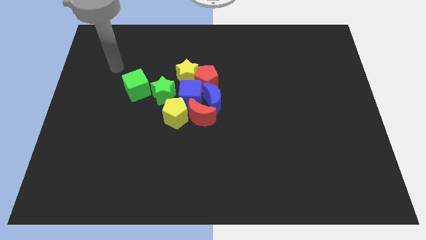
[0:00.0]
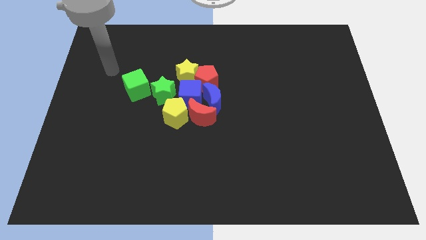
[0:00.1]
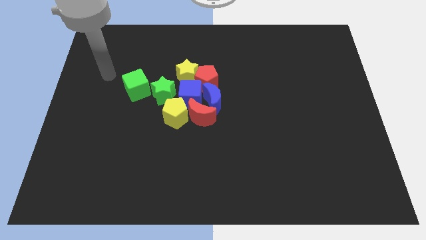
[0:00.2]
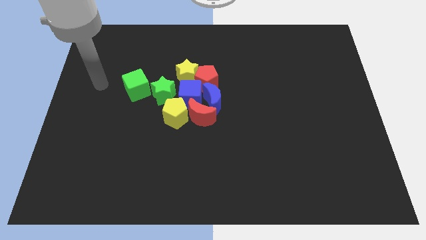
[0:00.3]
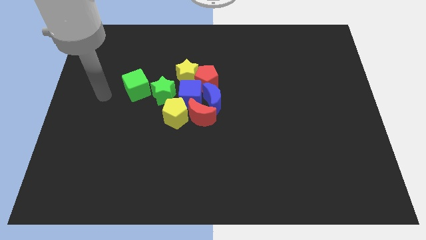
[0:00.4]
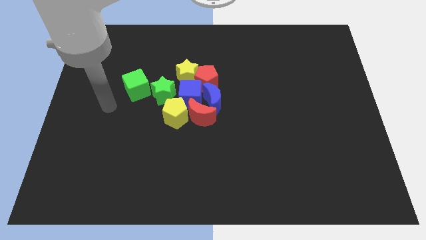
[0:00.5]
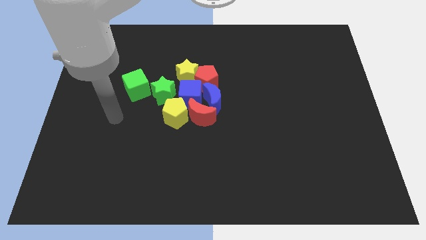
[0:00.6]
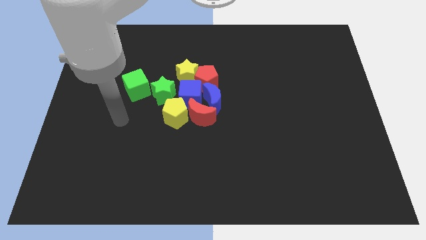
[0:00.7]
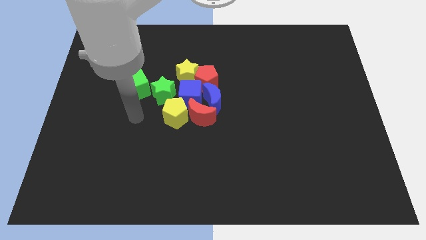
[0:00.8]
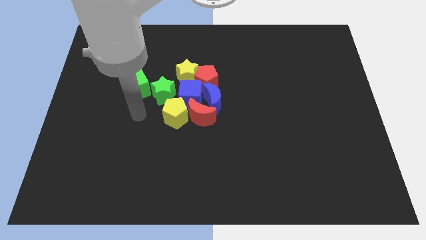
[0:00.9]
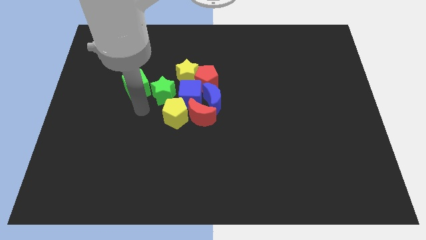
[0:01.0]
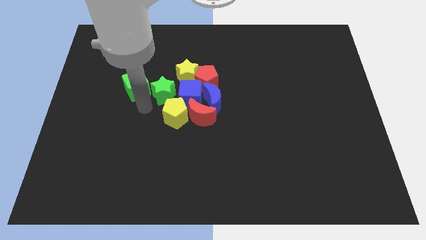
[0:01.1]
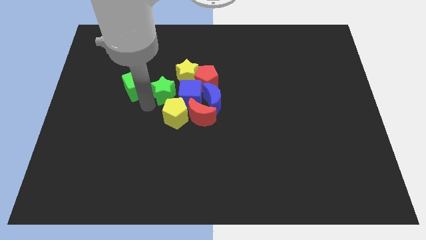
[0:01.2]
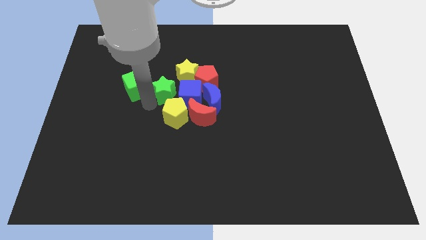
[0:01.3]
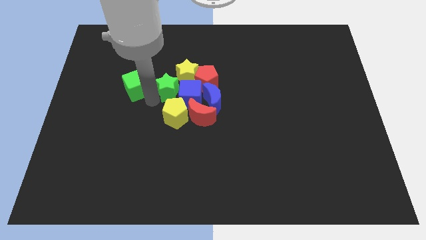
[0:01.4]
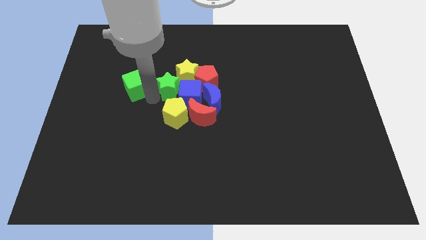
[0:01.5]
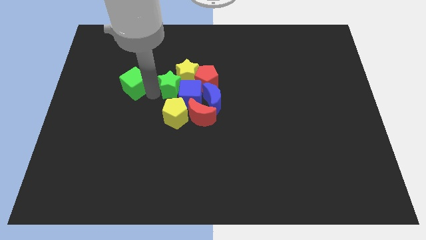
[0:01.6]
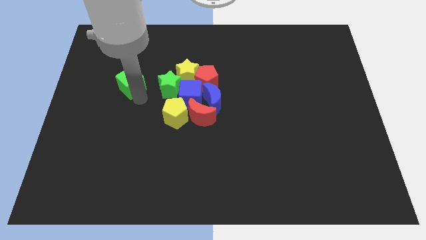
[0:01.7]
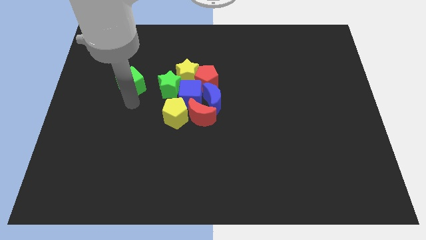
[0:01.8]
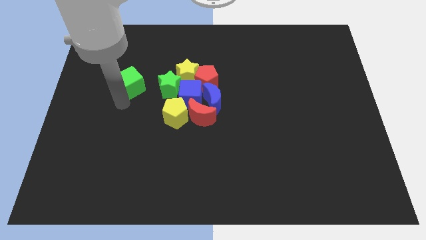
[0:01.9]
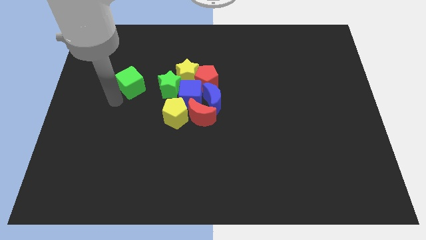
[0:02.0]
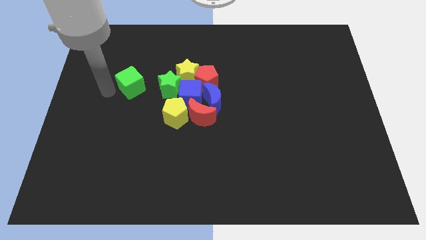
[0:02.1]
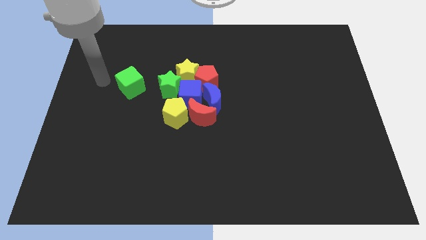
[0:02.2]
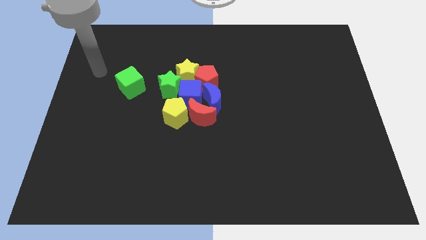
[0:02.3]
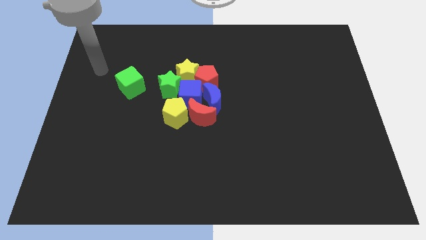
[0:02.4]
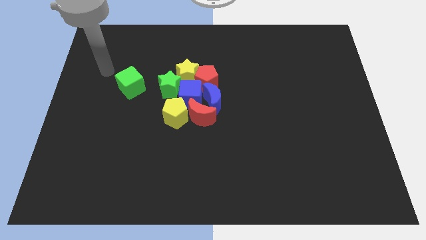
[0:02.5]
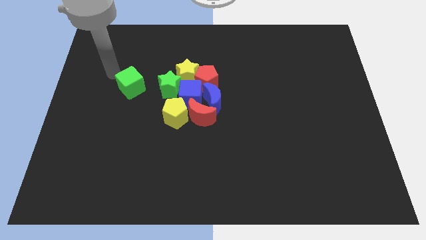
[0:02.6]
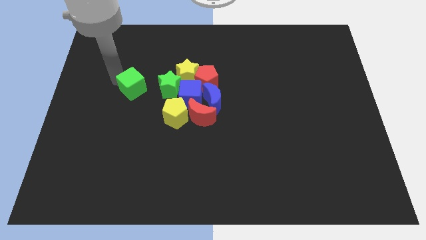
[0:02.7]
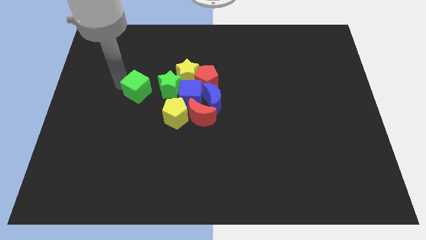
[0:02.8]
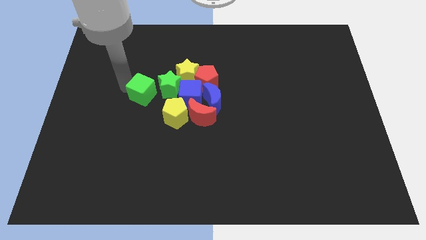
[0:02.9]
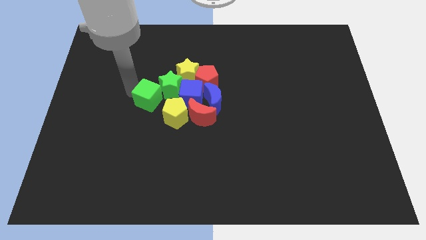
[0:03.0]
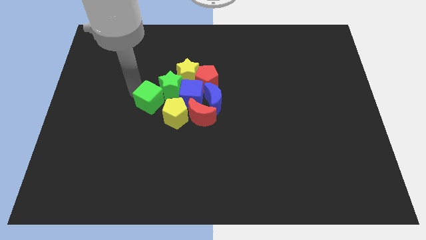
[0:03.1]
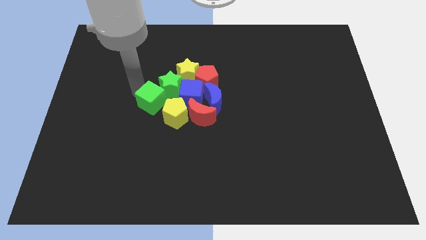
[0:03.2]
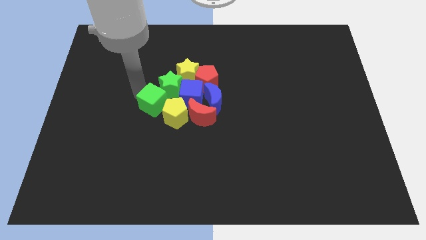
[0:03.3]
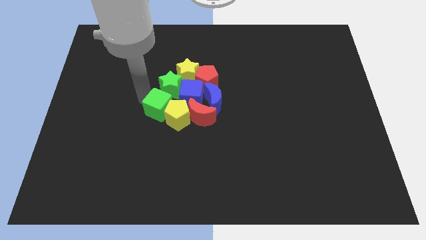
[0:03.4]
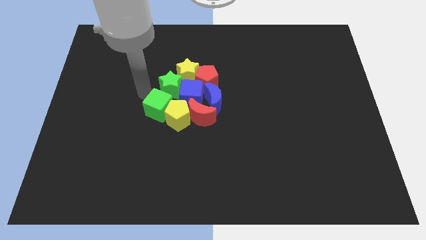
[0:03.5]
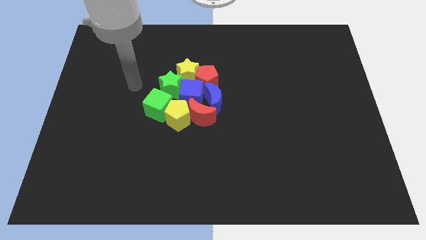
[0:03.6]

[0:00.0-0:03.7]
move the green blocks towards the yellow blocks

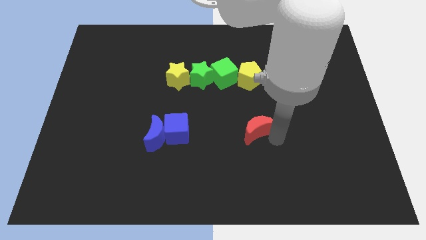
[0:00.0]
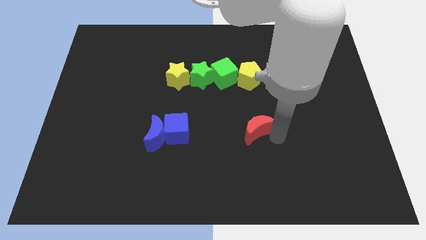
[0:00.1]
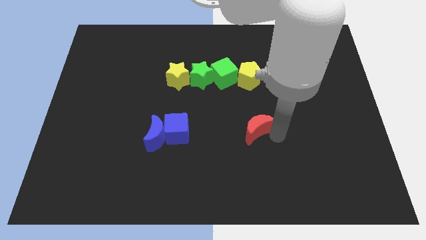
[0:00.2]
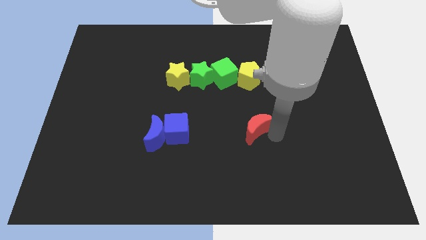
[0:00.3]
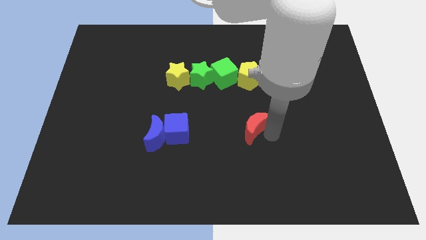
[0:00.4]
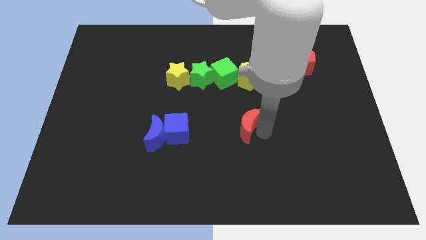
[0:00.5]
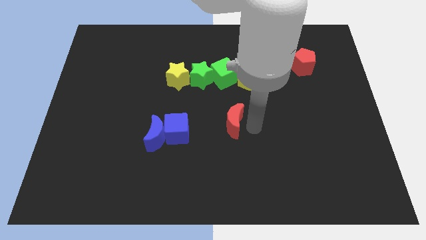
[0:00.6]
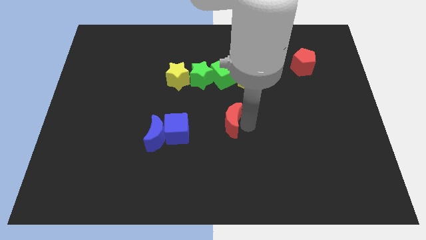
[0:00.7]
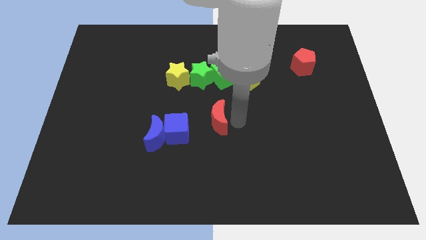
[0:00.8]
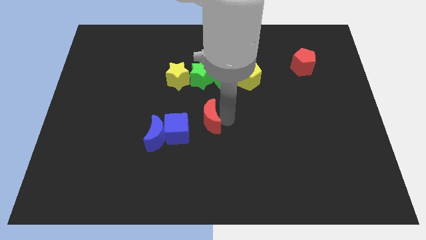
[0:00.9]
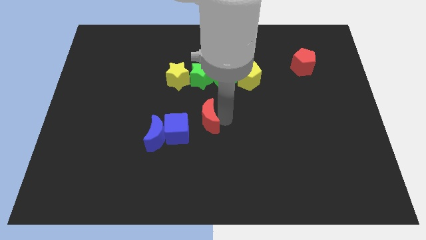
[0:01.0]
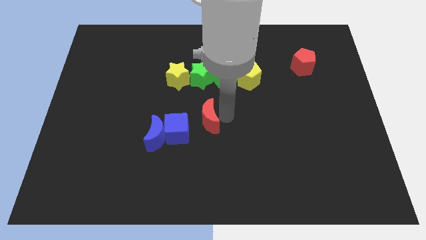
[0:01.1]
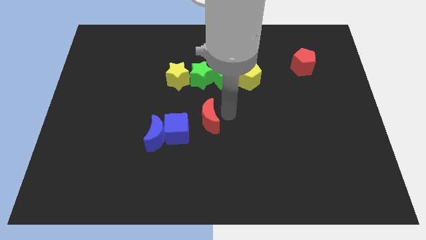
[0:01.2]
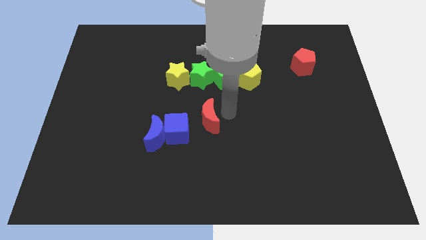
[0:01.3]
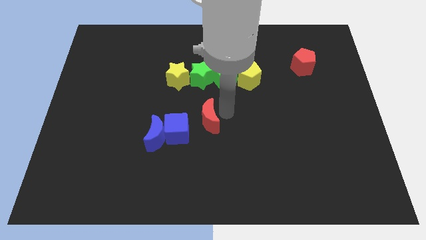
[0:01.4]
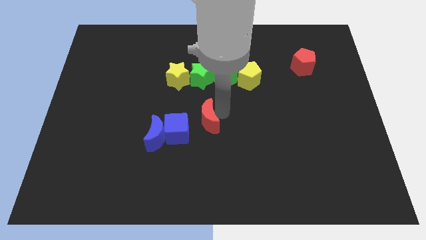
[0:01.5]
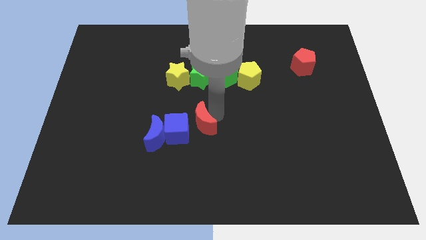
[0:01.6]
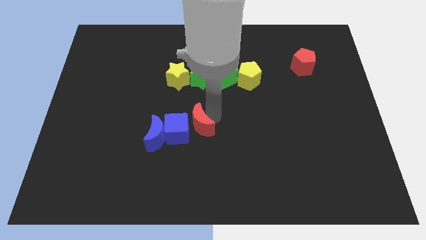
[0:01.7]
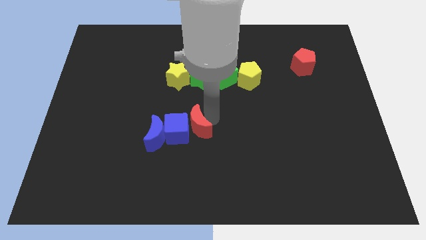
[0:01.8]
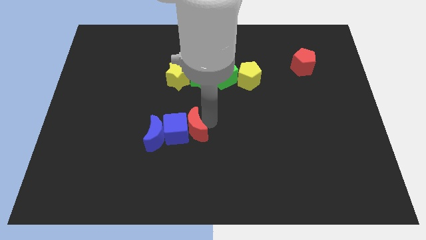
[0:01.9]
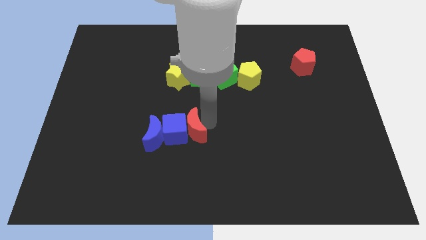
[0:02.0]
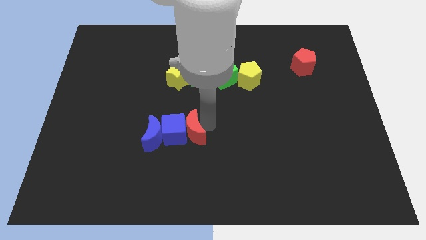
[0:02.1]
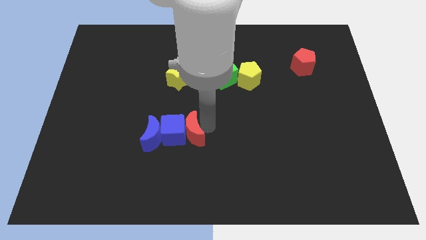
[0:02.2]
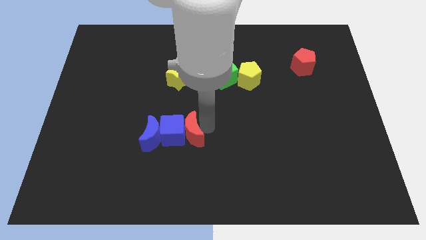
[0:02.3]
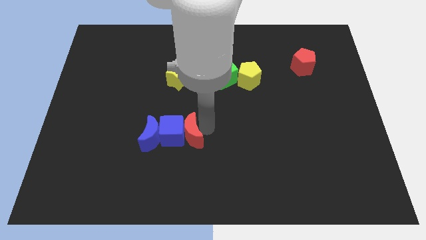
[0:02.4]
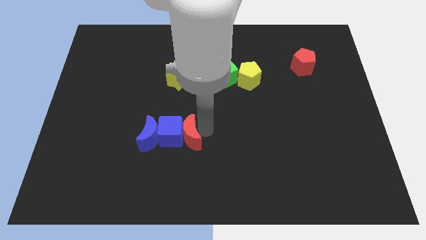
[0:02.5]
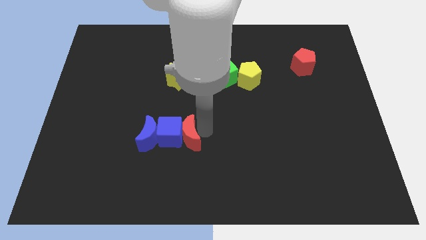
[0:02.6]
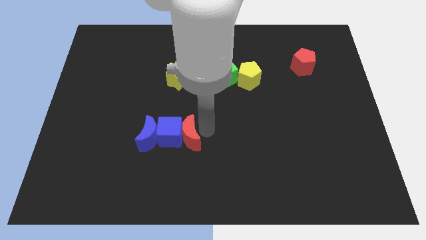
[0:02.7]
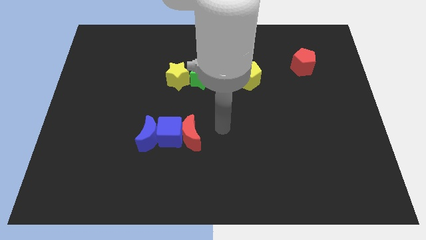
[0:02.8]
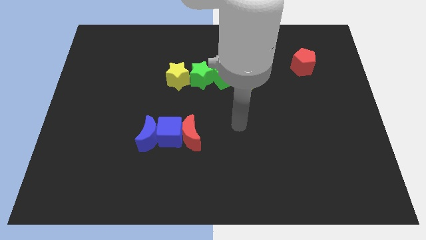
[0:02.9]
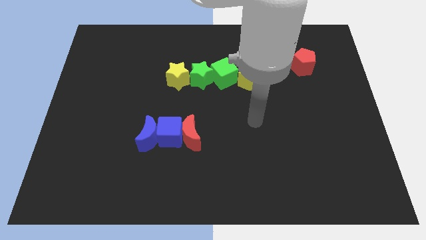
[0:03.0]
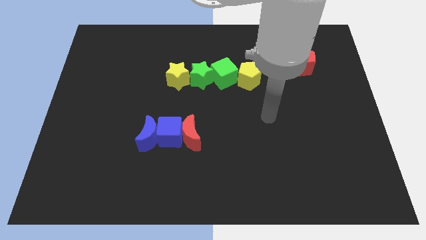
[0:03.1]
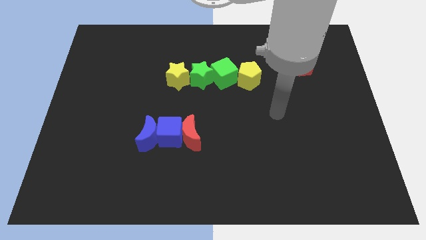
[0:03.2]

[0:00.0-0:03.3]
place the red crescent to the right side of the blue cube

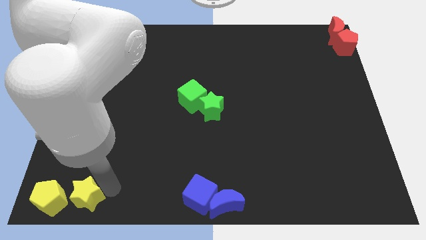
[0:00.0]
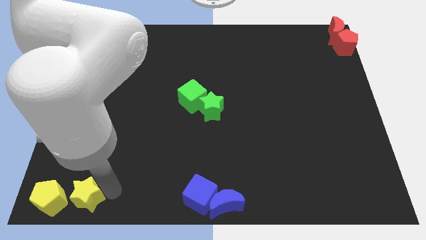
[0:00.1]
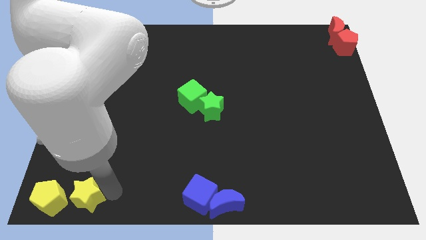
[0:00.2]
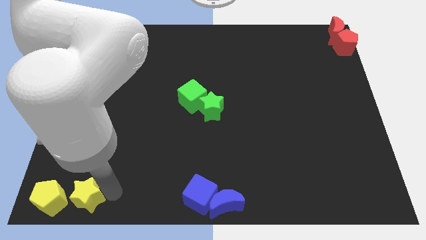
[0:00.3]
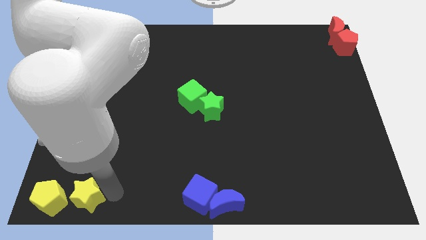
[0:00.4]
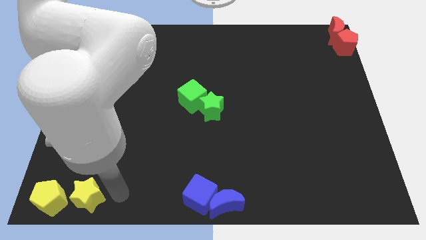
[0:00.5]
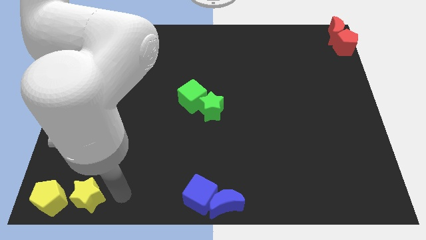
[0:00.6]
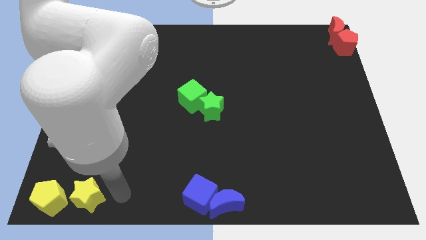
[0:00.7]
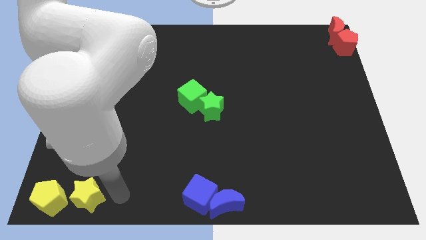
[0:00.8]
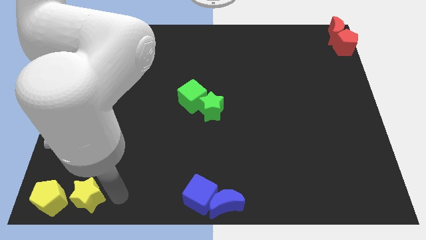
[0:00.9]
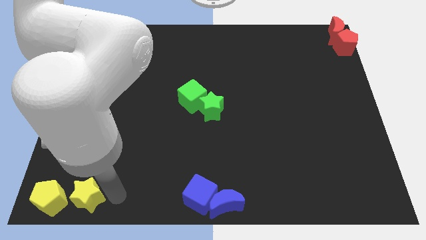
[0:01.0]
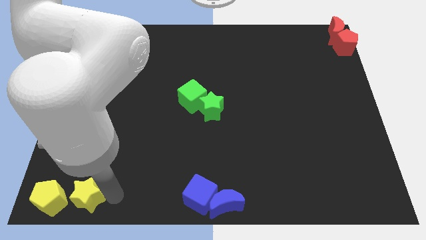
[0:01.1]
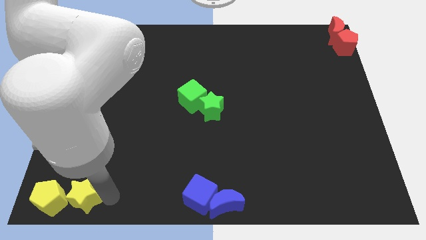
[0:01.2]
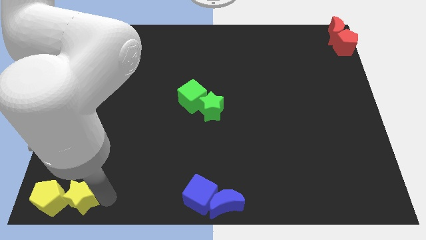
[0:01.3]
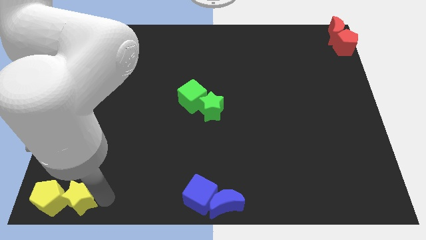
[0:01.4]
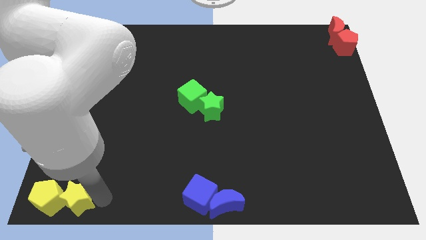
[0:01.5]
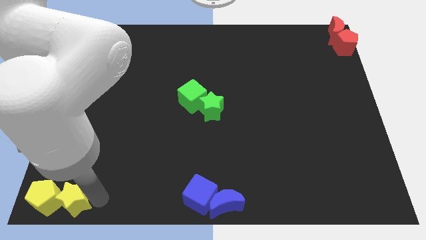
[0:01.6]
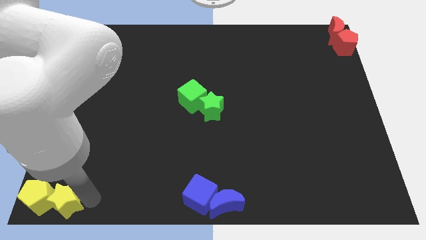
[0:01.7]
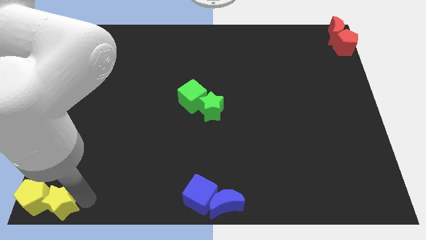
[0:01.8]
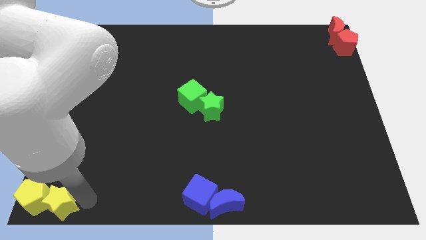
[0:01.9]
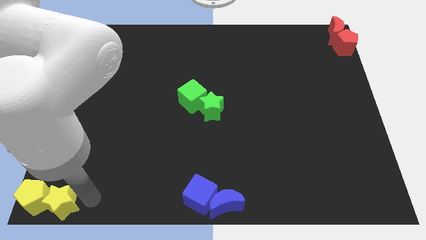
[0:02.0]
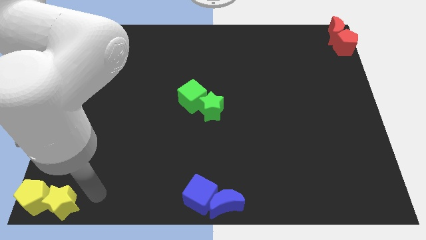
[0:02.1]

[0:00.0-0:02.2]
push the yellow star into the yellow pentagon
